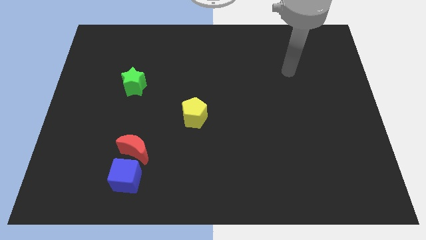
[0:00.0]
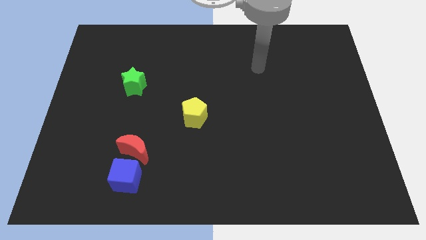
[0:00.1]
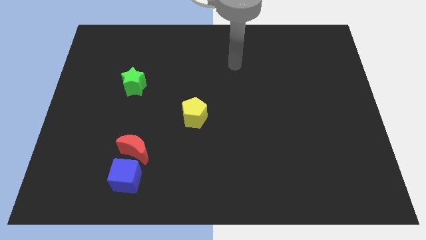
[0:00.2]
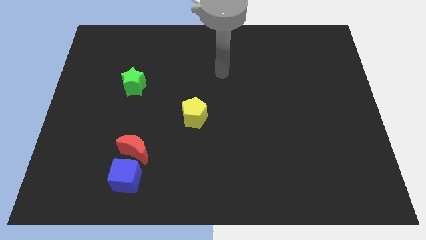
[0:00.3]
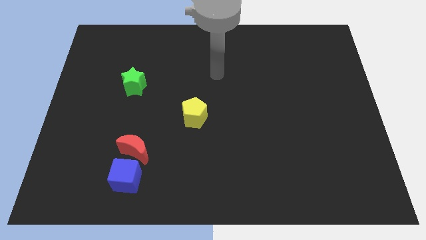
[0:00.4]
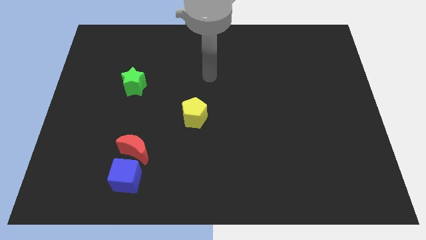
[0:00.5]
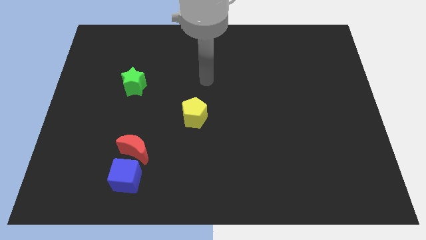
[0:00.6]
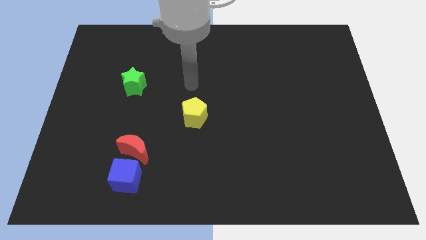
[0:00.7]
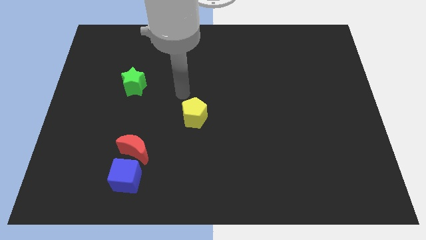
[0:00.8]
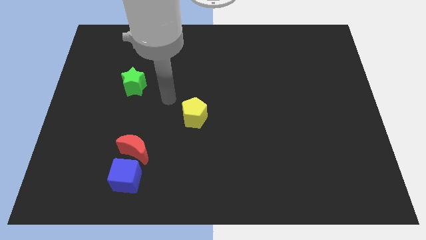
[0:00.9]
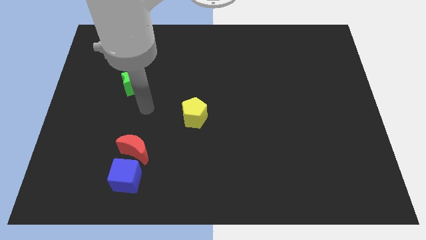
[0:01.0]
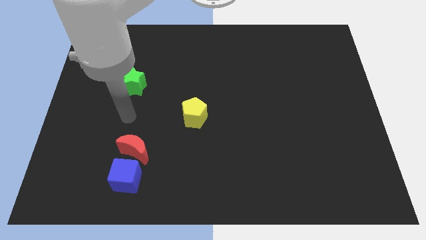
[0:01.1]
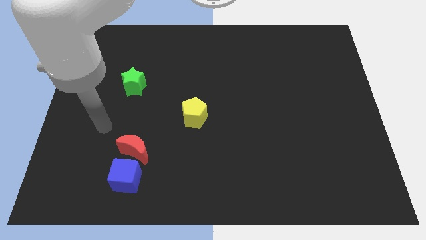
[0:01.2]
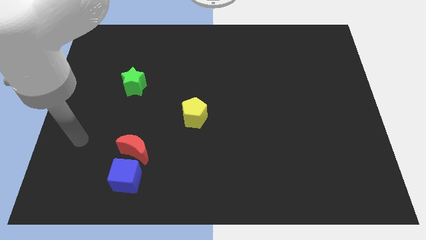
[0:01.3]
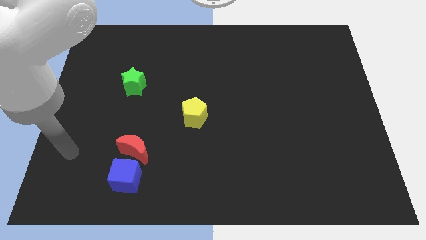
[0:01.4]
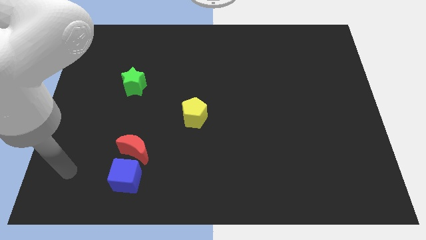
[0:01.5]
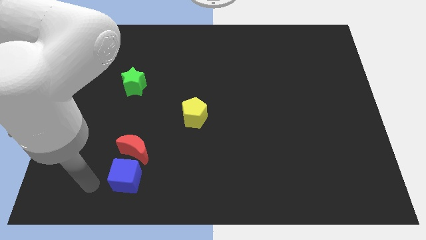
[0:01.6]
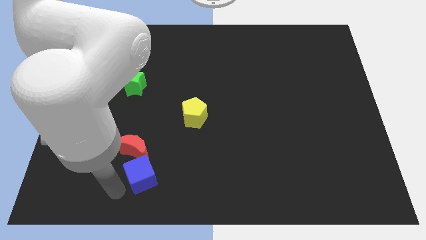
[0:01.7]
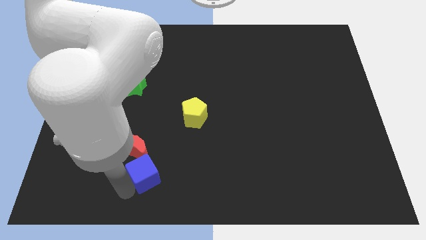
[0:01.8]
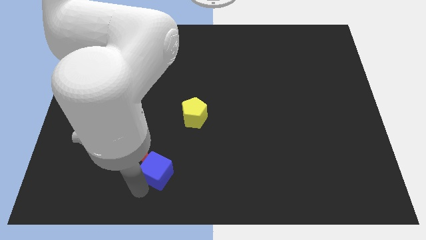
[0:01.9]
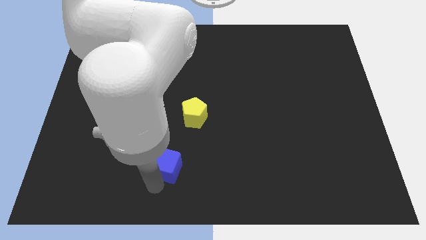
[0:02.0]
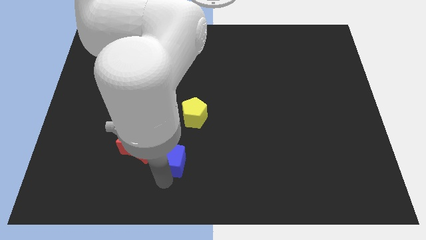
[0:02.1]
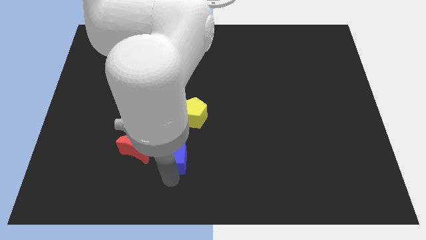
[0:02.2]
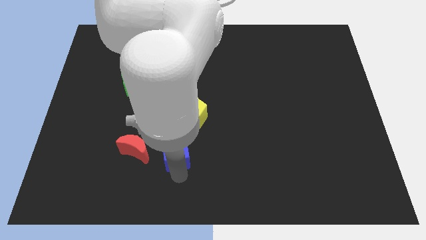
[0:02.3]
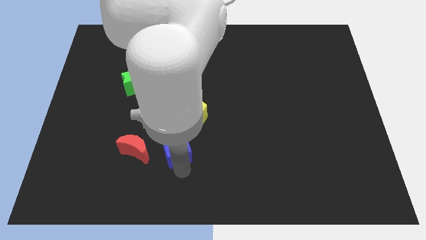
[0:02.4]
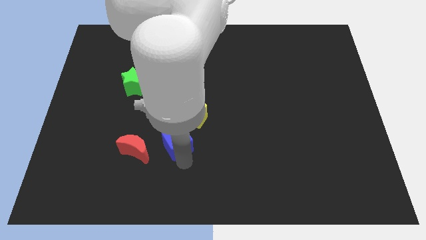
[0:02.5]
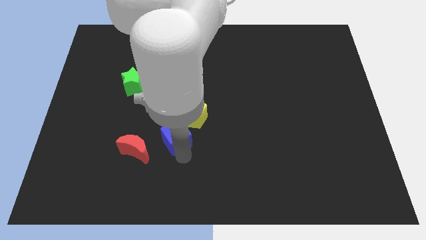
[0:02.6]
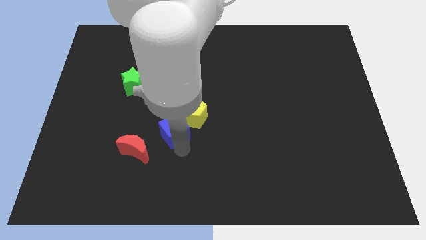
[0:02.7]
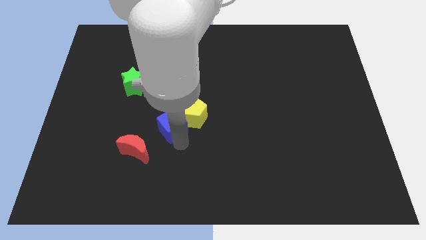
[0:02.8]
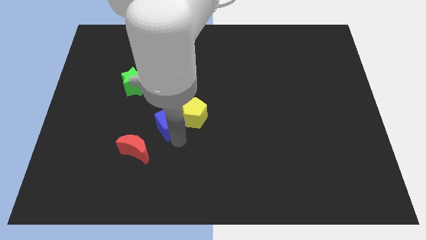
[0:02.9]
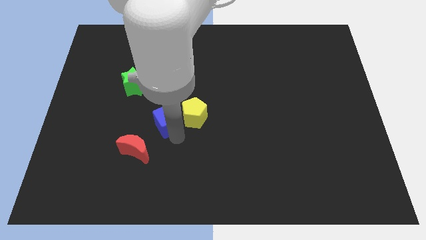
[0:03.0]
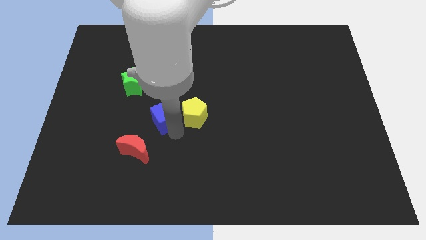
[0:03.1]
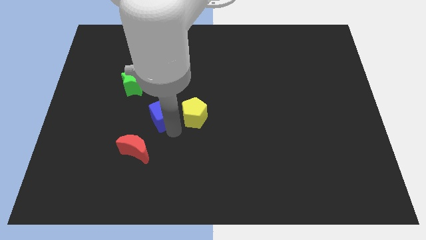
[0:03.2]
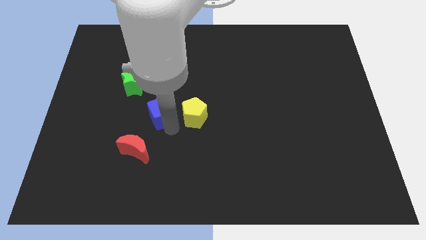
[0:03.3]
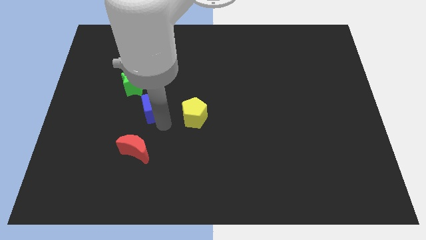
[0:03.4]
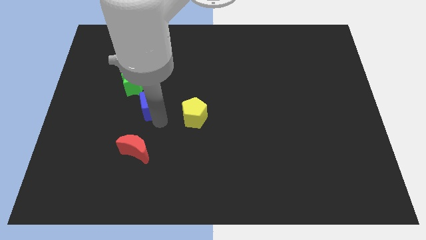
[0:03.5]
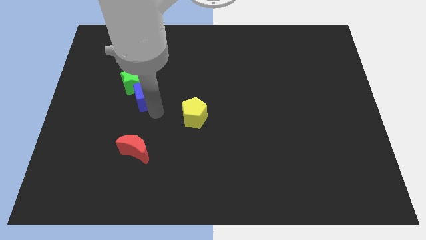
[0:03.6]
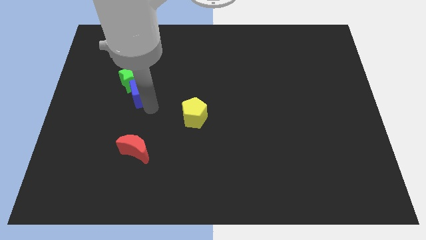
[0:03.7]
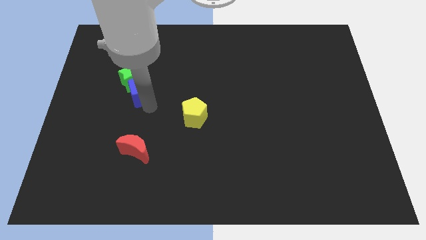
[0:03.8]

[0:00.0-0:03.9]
slide the blue block to the star

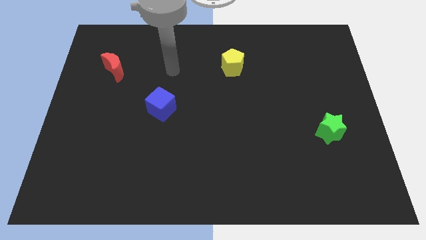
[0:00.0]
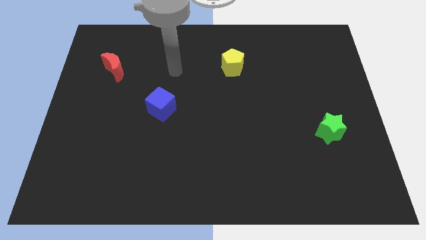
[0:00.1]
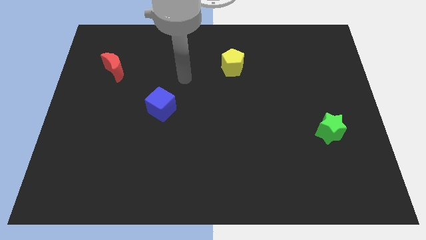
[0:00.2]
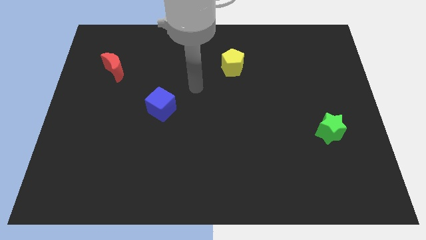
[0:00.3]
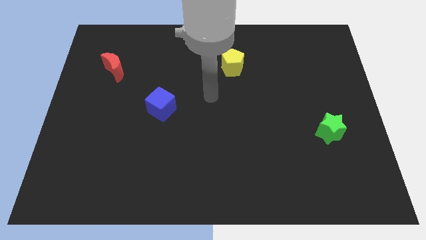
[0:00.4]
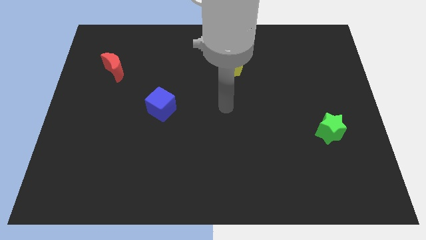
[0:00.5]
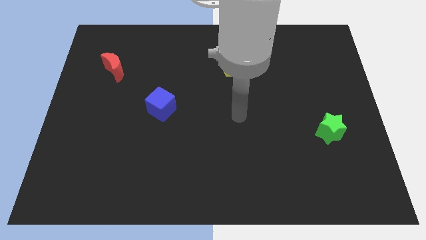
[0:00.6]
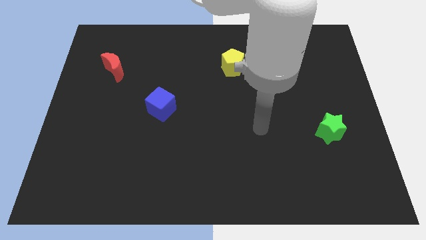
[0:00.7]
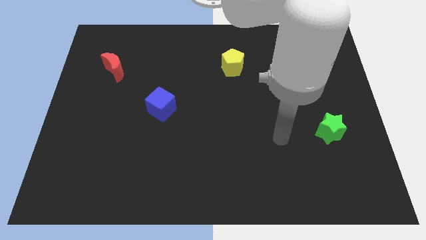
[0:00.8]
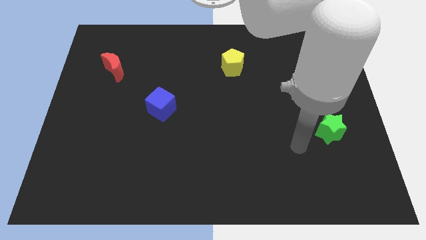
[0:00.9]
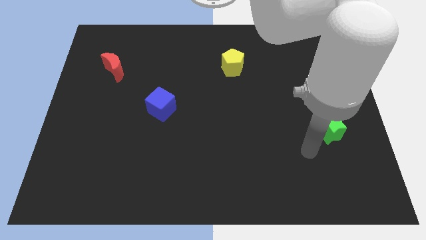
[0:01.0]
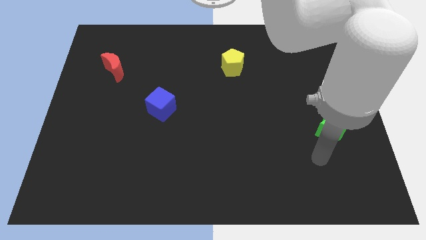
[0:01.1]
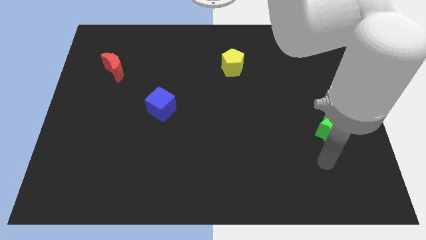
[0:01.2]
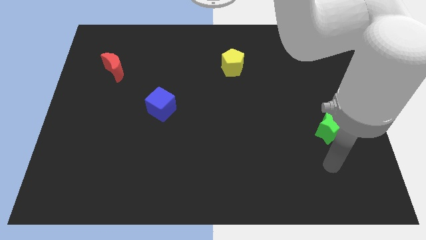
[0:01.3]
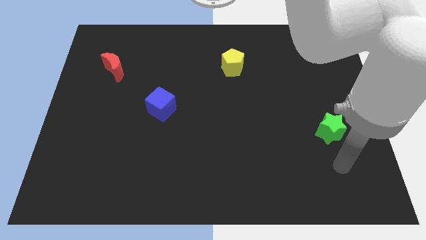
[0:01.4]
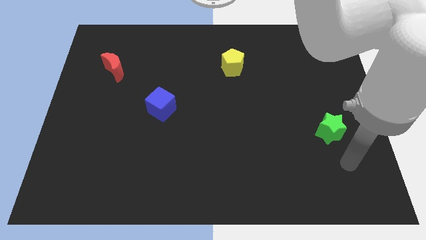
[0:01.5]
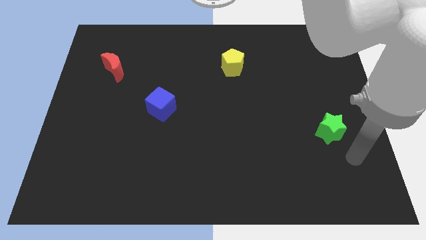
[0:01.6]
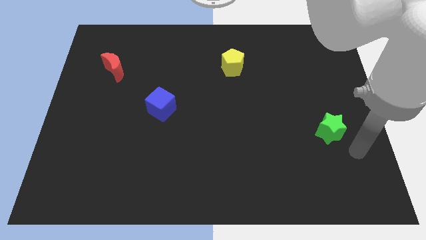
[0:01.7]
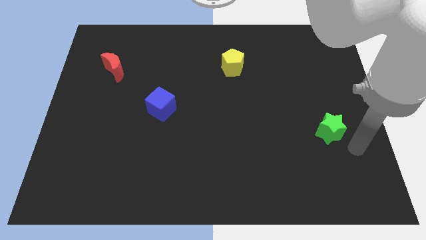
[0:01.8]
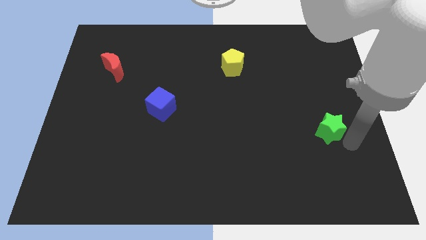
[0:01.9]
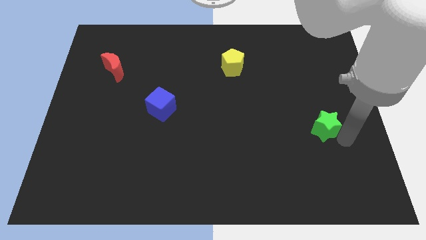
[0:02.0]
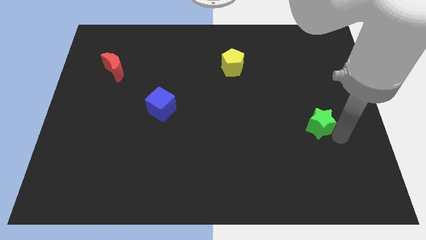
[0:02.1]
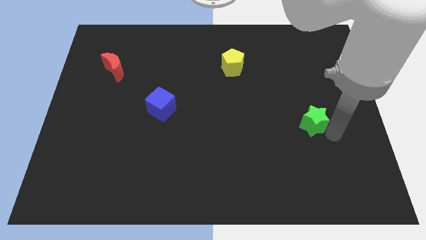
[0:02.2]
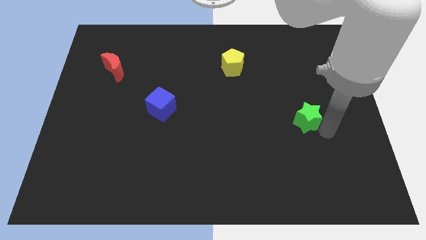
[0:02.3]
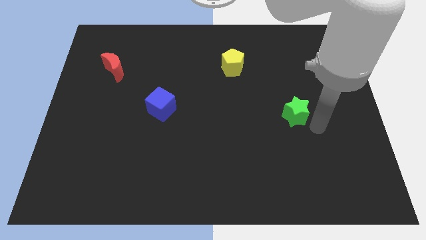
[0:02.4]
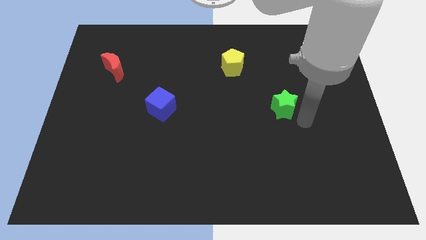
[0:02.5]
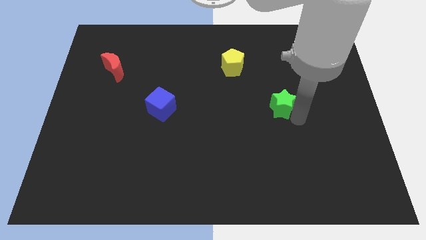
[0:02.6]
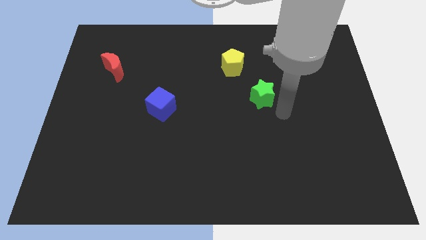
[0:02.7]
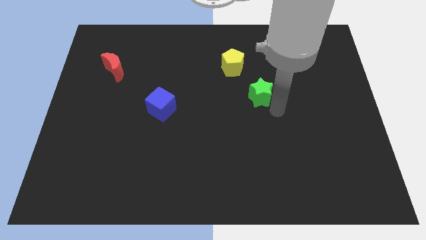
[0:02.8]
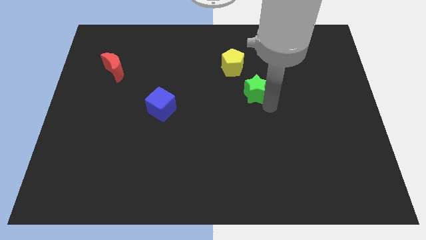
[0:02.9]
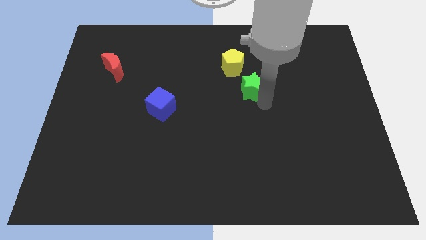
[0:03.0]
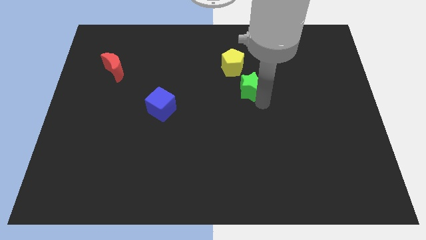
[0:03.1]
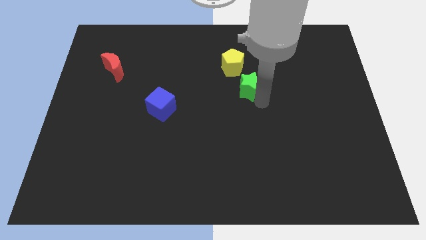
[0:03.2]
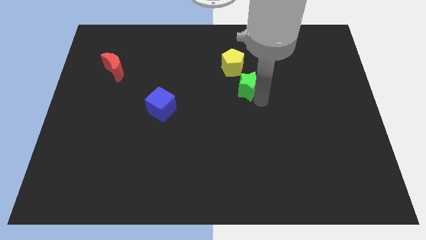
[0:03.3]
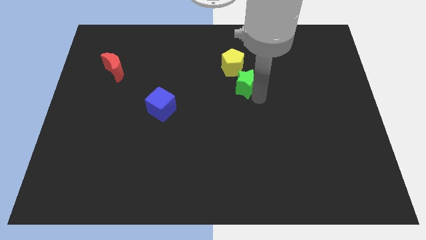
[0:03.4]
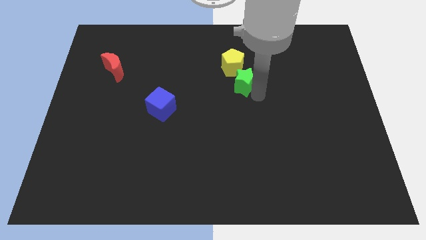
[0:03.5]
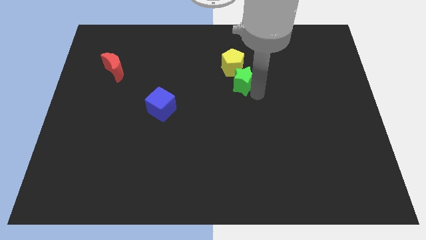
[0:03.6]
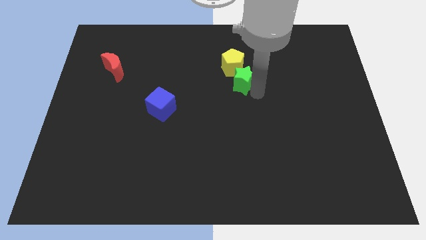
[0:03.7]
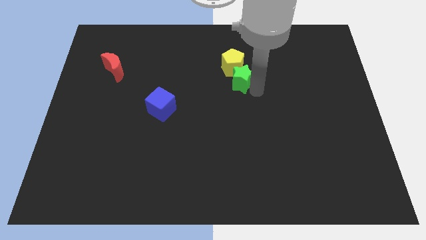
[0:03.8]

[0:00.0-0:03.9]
slide the green star to the pentagon

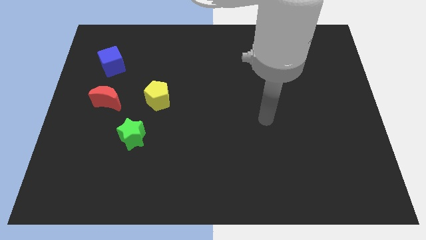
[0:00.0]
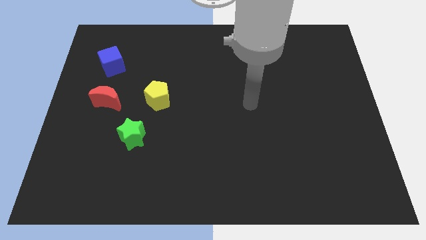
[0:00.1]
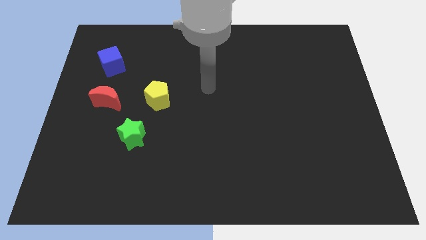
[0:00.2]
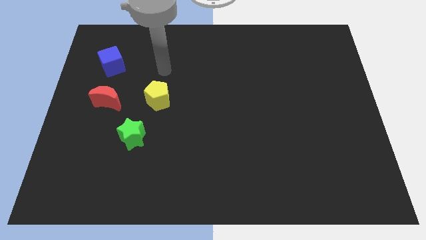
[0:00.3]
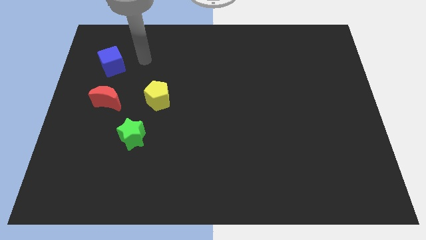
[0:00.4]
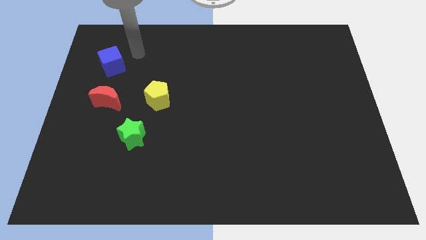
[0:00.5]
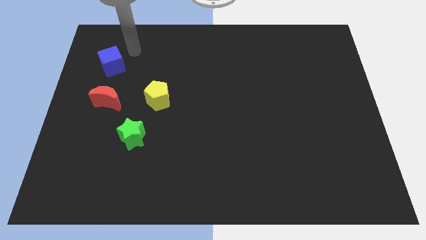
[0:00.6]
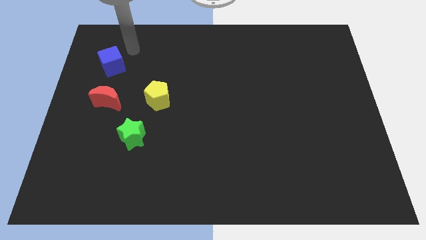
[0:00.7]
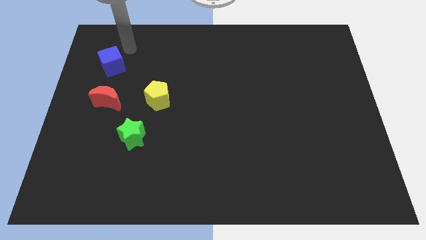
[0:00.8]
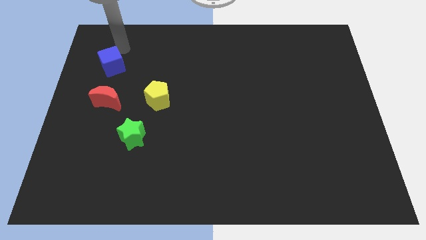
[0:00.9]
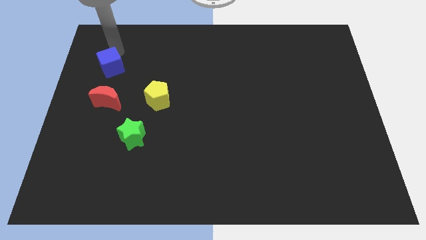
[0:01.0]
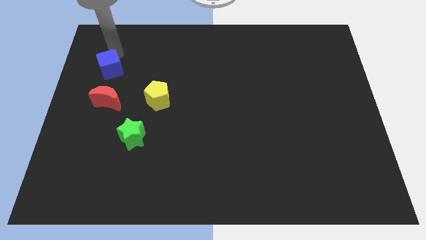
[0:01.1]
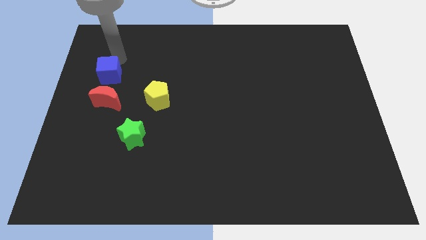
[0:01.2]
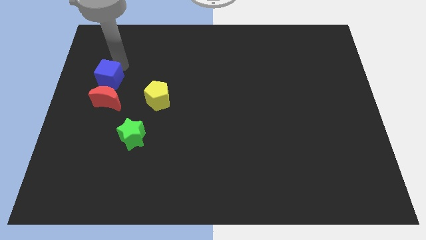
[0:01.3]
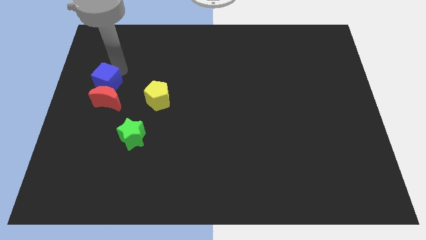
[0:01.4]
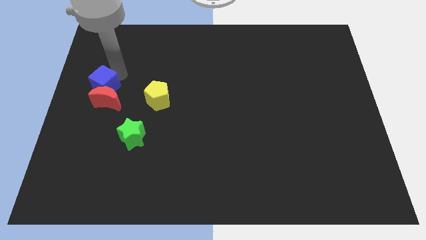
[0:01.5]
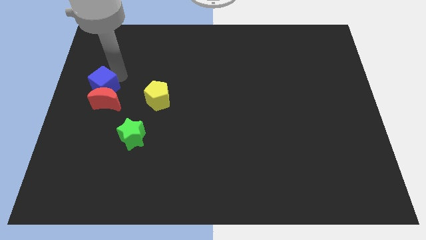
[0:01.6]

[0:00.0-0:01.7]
push the blue cube close to the red moon
